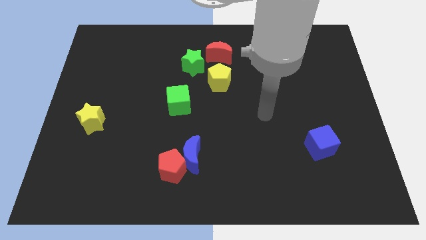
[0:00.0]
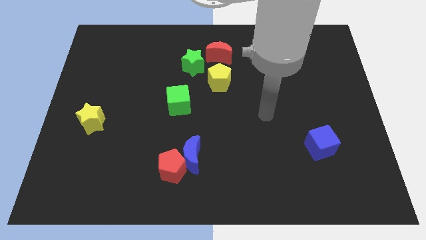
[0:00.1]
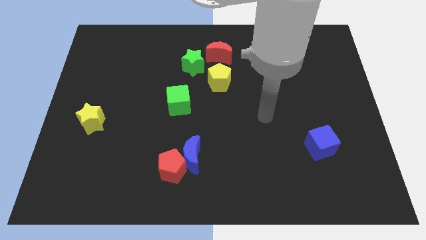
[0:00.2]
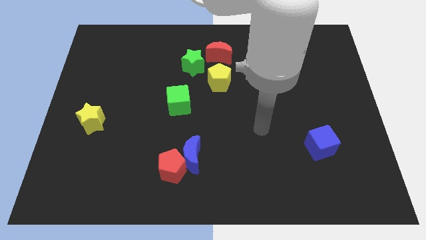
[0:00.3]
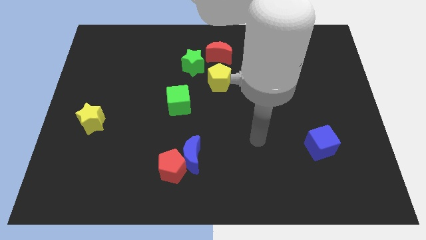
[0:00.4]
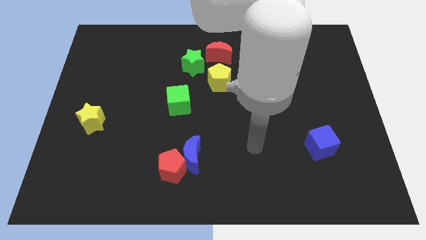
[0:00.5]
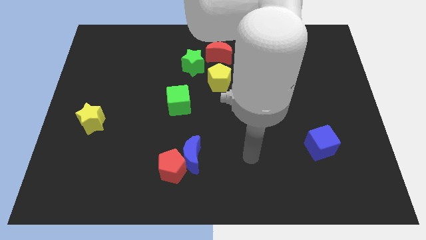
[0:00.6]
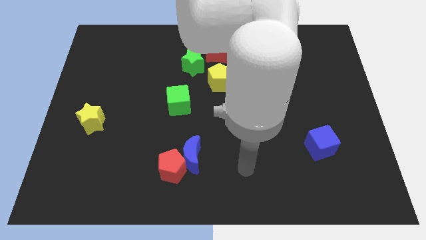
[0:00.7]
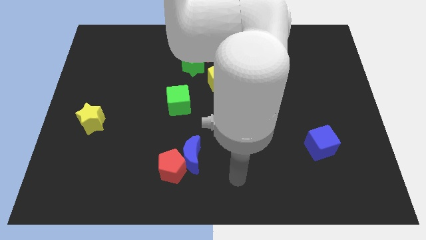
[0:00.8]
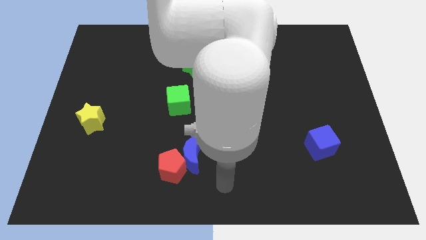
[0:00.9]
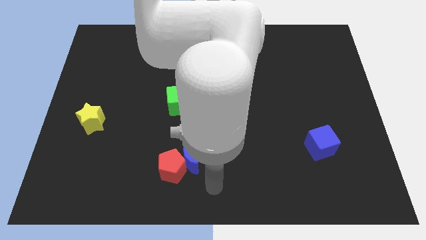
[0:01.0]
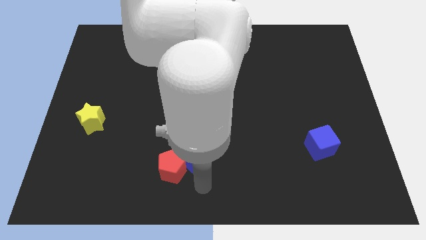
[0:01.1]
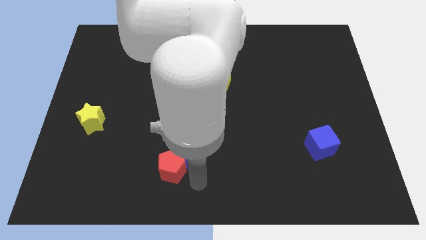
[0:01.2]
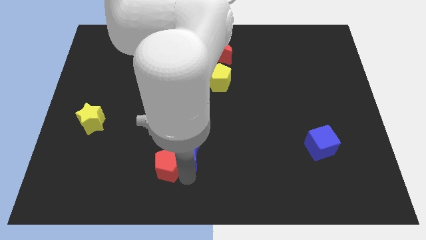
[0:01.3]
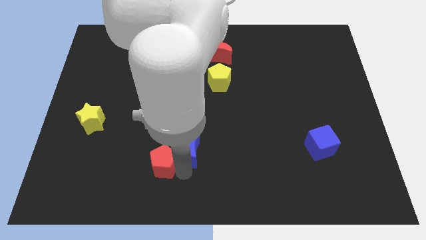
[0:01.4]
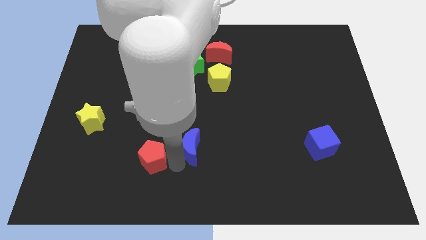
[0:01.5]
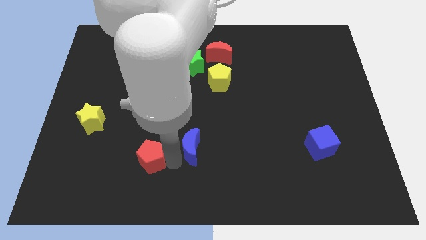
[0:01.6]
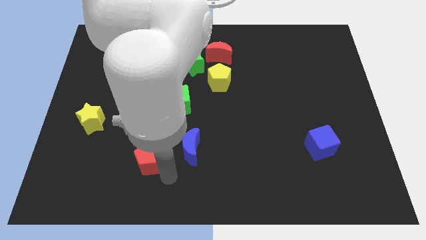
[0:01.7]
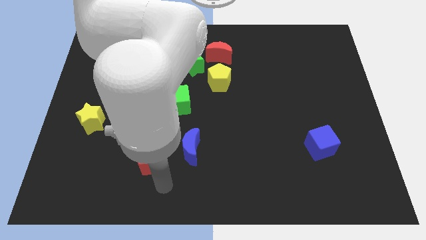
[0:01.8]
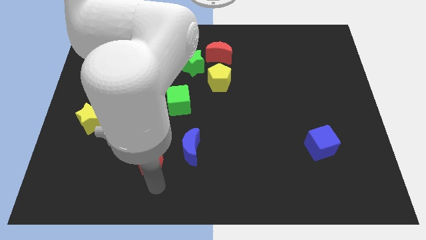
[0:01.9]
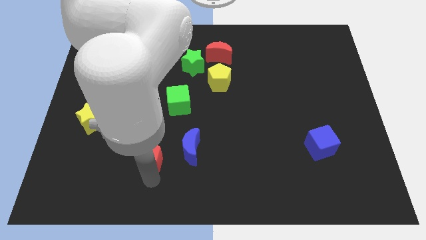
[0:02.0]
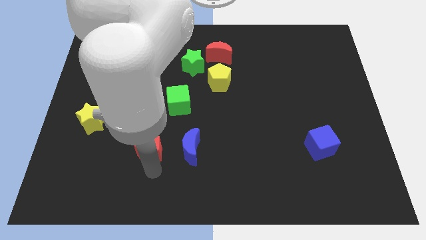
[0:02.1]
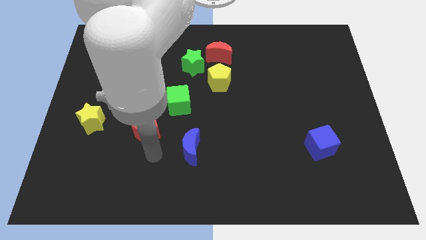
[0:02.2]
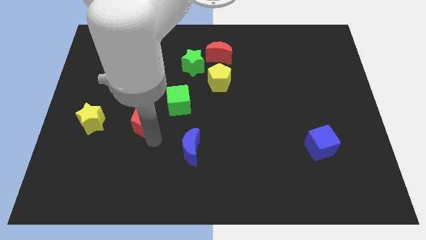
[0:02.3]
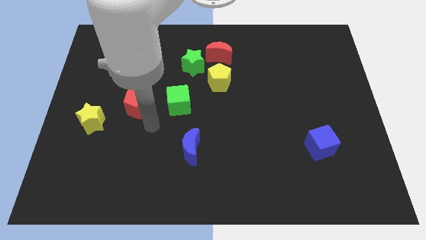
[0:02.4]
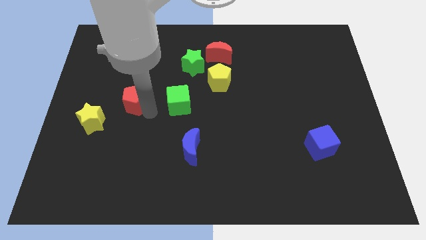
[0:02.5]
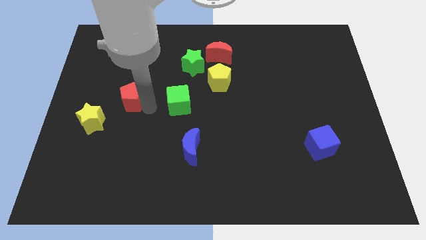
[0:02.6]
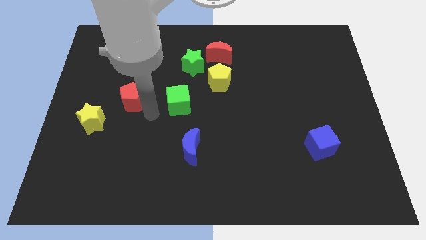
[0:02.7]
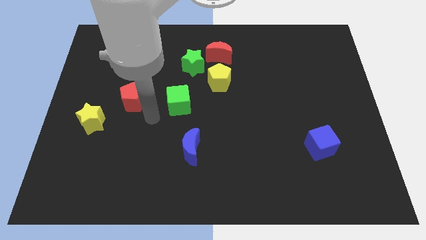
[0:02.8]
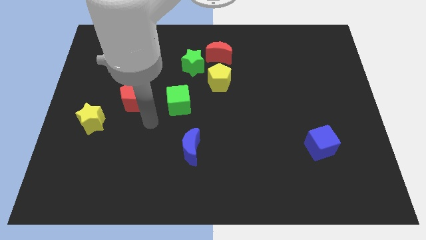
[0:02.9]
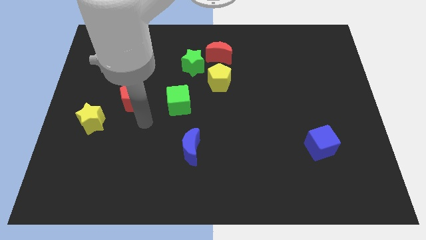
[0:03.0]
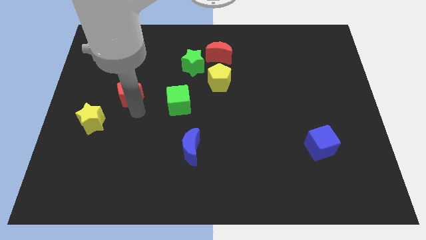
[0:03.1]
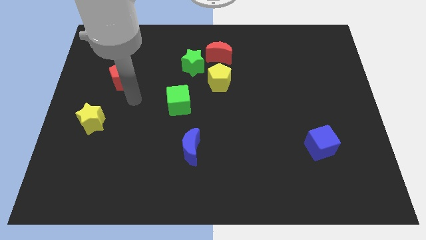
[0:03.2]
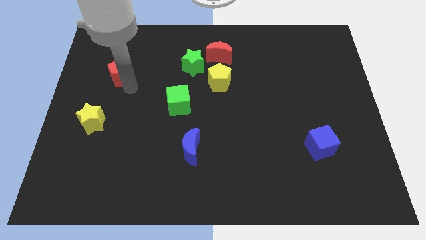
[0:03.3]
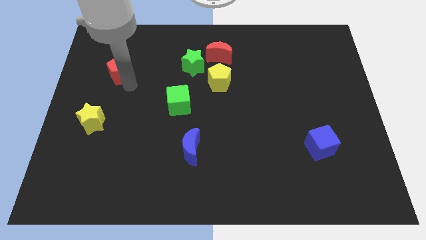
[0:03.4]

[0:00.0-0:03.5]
move the red pentagon diagonally left of the green star

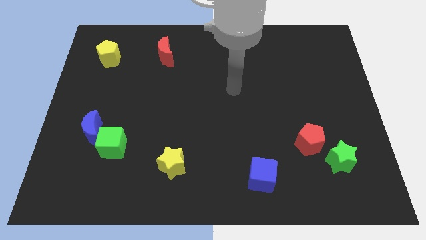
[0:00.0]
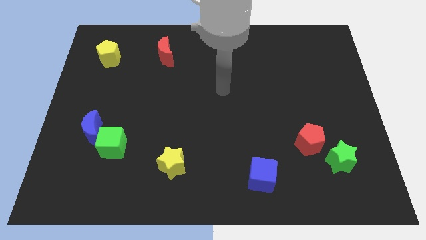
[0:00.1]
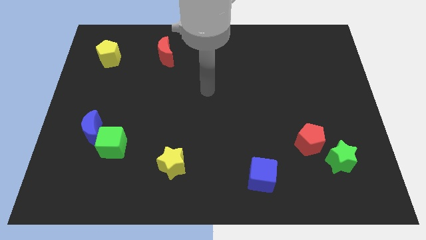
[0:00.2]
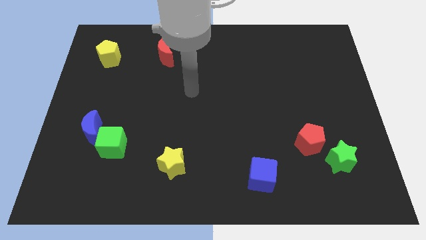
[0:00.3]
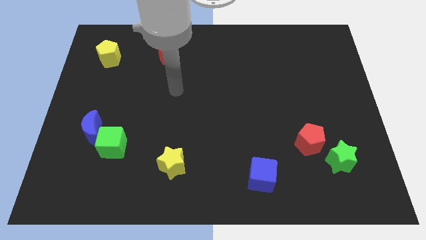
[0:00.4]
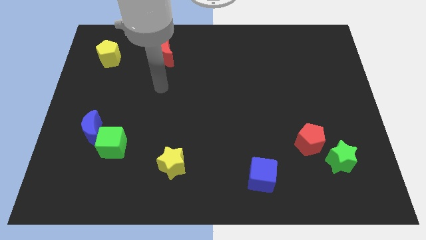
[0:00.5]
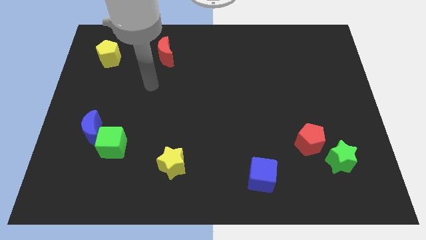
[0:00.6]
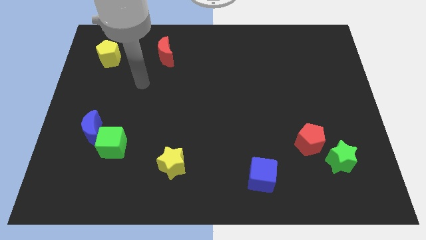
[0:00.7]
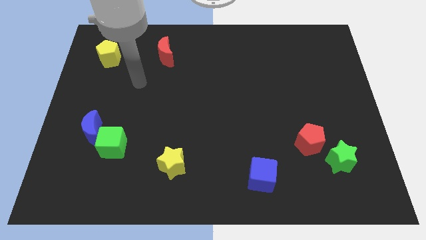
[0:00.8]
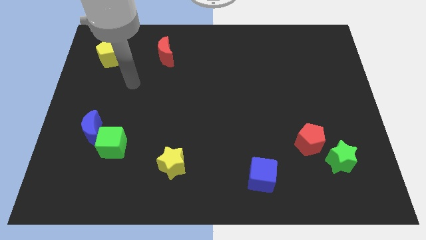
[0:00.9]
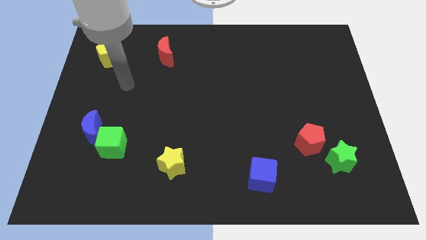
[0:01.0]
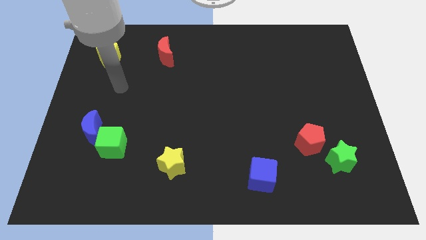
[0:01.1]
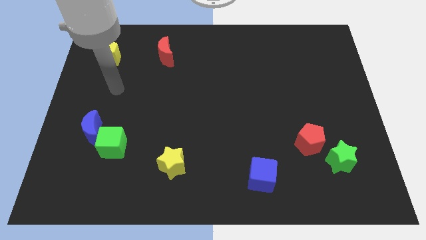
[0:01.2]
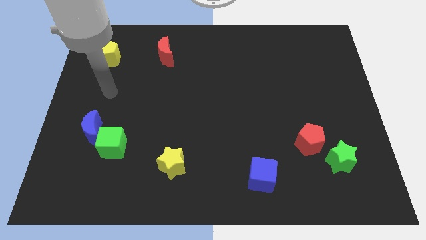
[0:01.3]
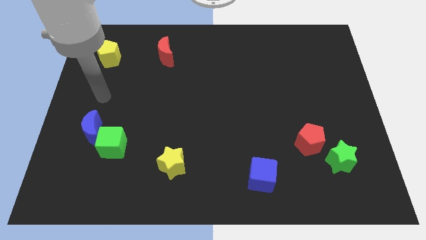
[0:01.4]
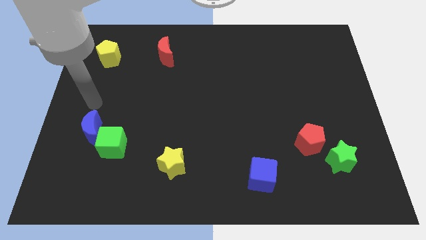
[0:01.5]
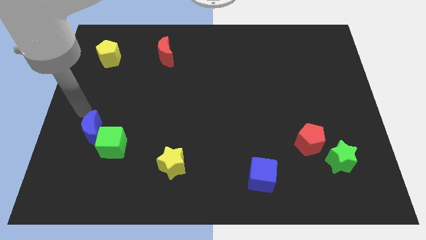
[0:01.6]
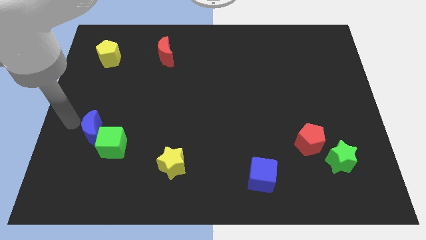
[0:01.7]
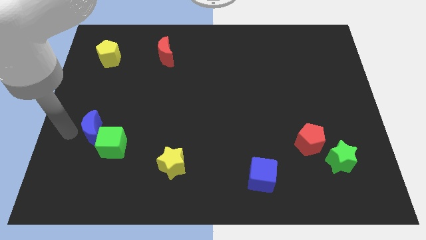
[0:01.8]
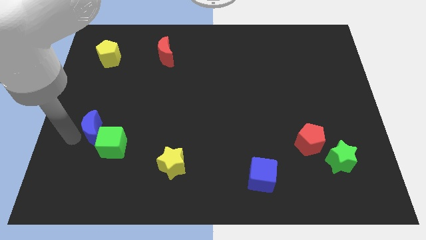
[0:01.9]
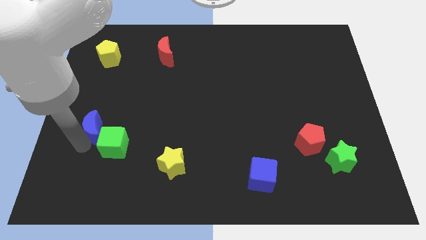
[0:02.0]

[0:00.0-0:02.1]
move your arm close to the blue moon

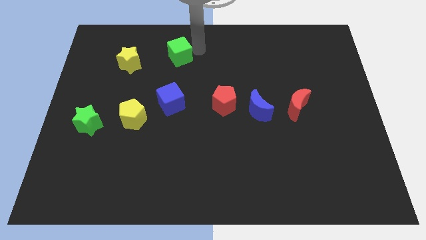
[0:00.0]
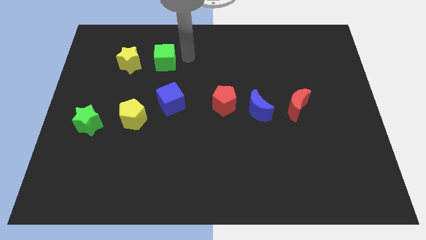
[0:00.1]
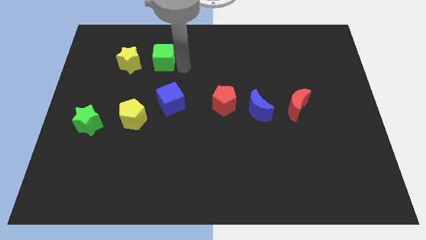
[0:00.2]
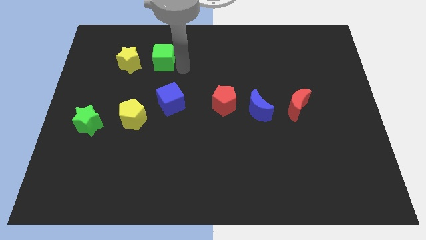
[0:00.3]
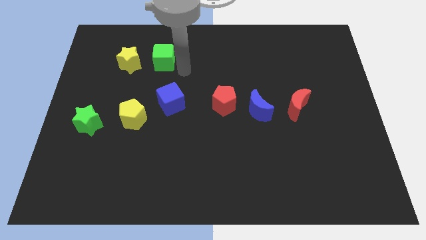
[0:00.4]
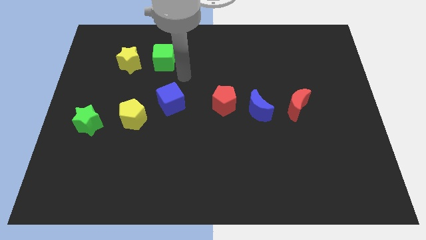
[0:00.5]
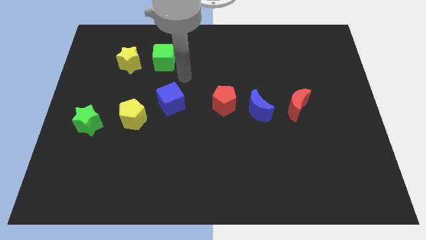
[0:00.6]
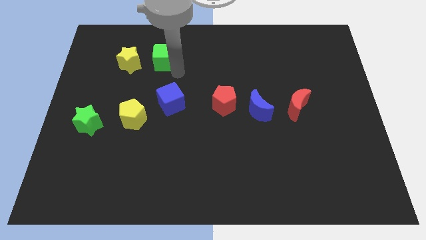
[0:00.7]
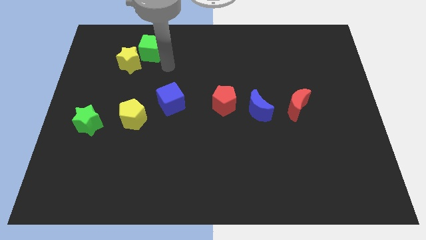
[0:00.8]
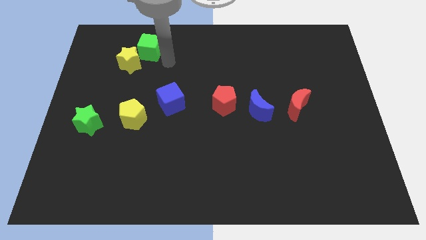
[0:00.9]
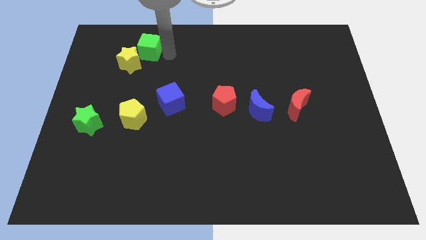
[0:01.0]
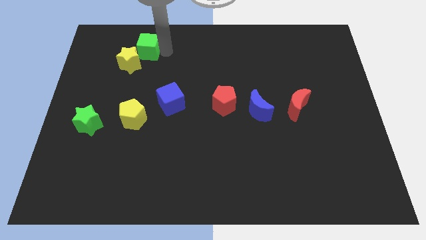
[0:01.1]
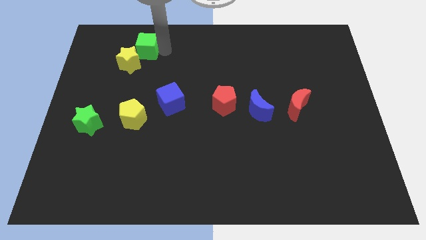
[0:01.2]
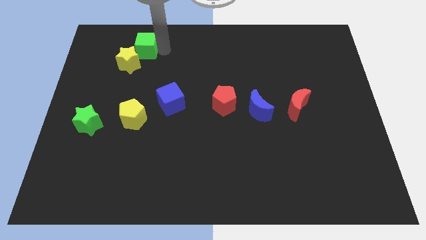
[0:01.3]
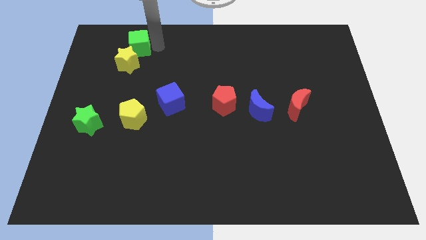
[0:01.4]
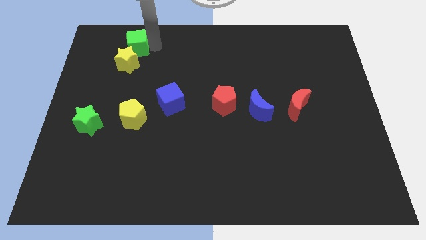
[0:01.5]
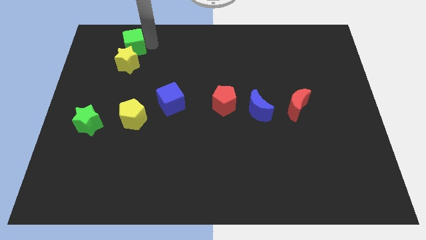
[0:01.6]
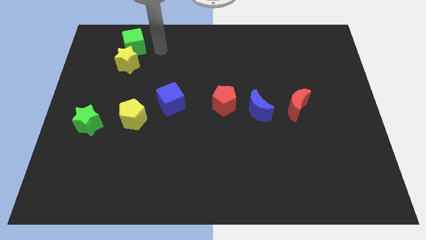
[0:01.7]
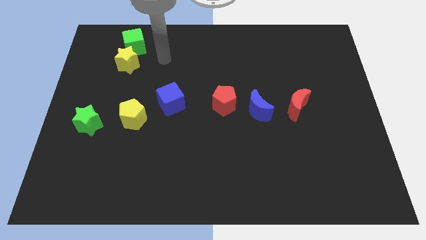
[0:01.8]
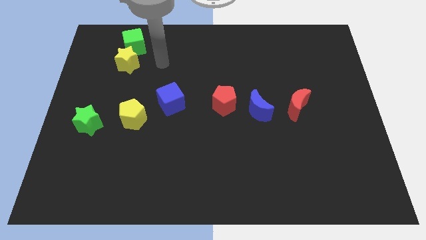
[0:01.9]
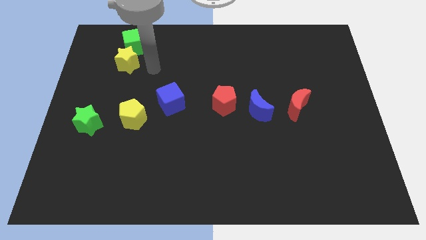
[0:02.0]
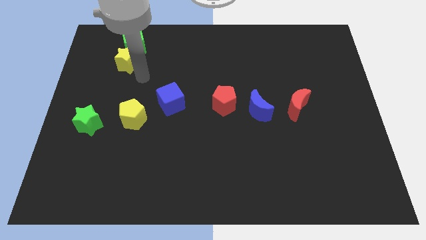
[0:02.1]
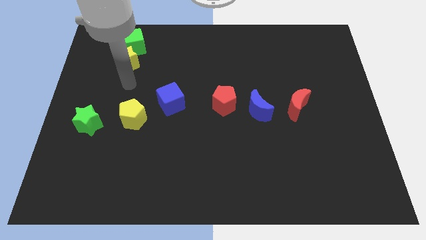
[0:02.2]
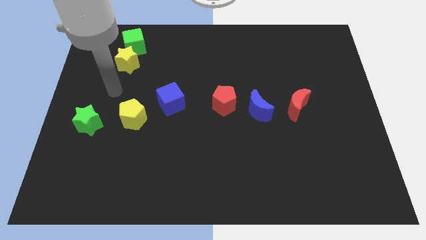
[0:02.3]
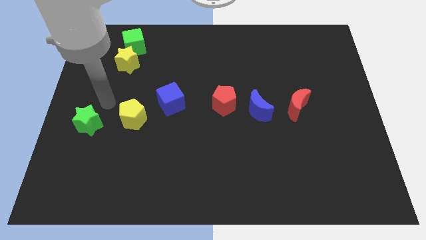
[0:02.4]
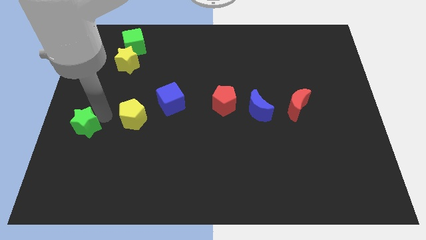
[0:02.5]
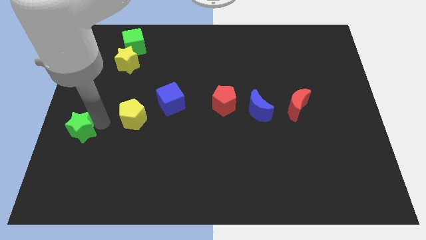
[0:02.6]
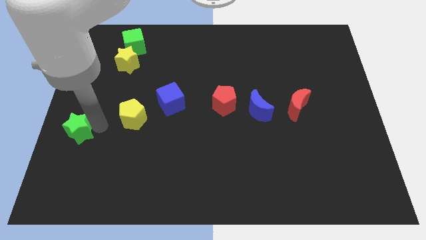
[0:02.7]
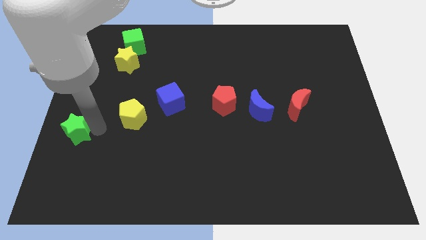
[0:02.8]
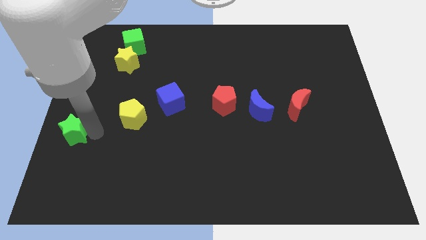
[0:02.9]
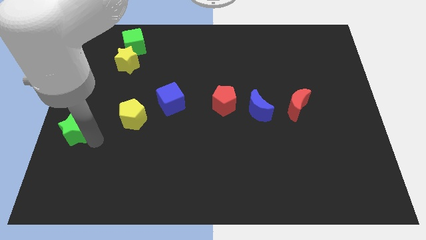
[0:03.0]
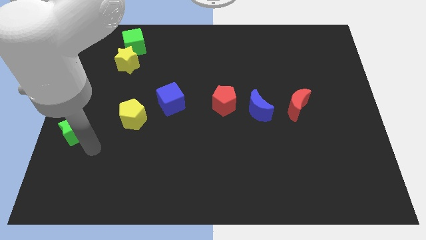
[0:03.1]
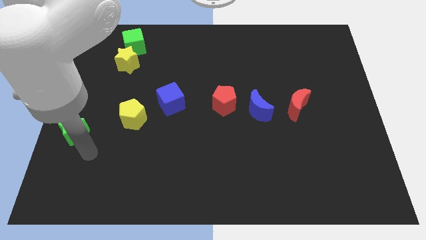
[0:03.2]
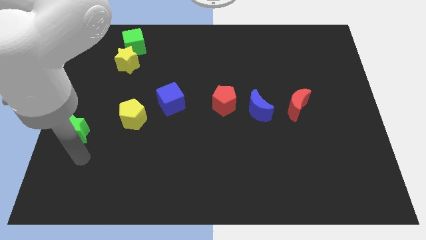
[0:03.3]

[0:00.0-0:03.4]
push green star slightly towards down

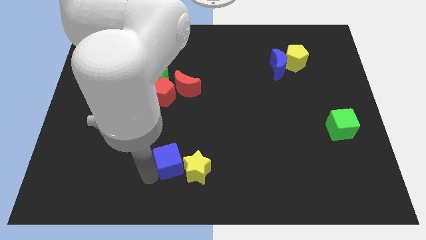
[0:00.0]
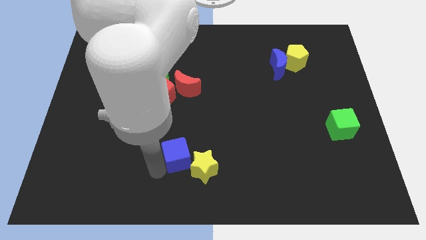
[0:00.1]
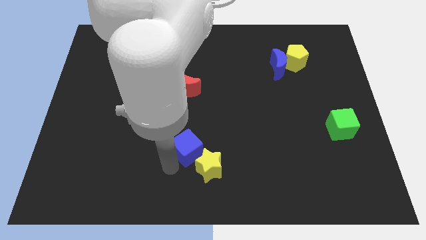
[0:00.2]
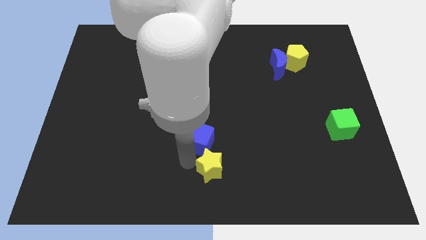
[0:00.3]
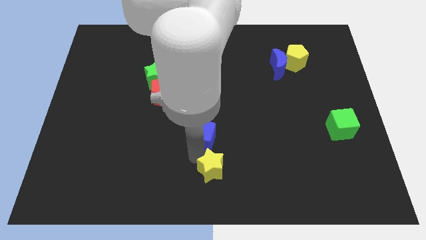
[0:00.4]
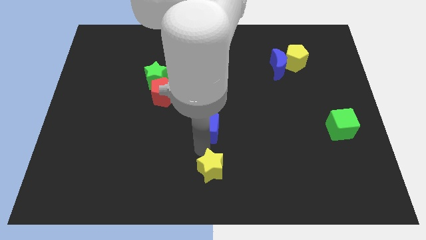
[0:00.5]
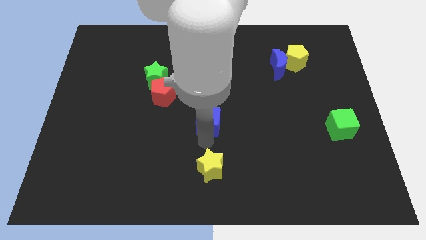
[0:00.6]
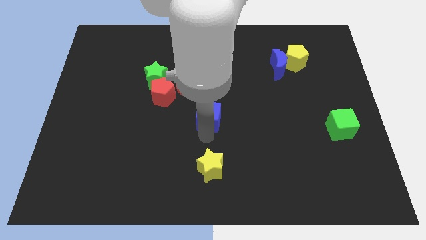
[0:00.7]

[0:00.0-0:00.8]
separate the blue cube and the yellow star
